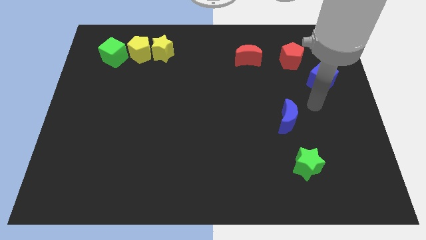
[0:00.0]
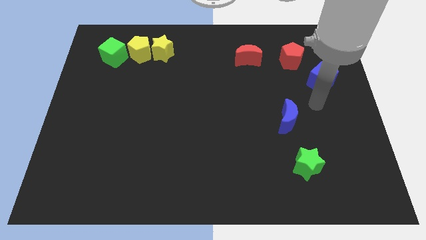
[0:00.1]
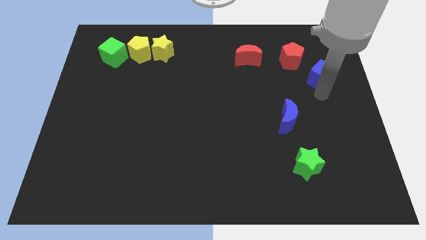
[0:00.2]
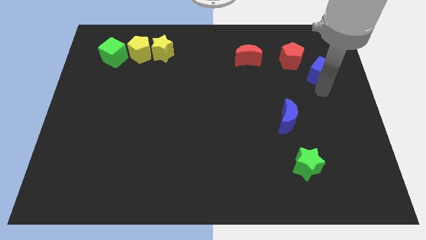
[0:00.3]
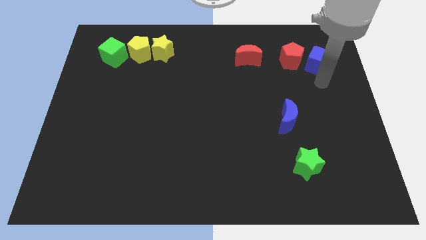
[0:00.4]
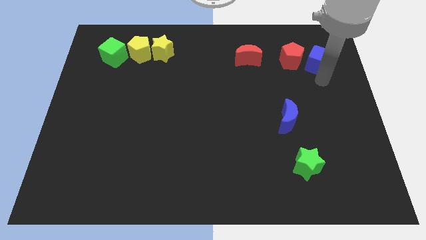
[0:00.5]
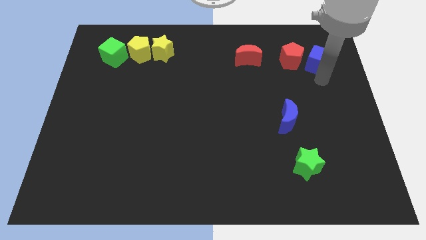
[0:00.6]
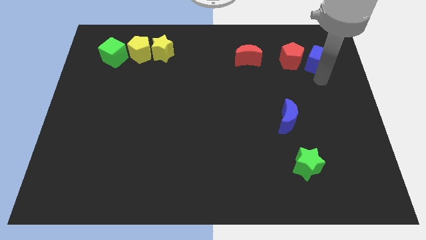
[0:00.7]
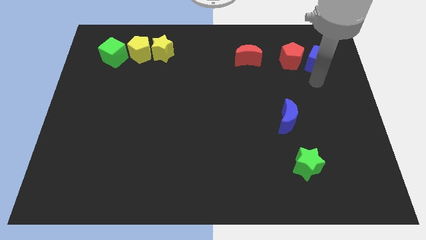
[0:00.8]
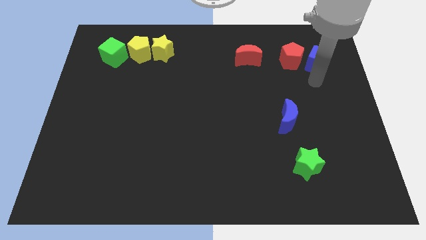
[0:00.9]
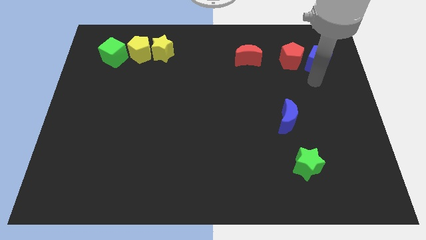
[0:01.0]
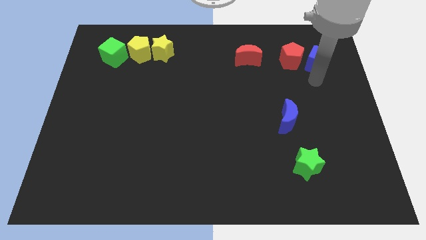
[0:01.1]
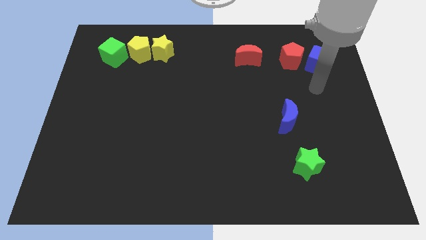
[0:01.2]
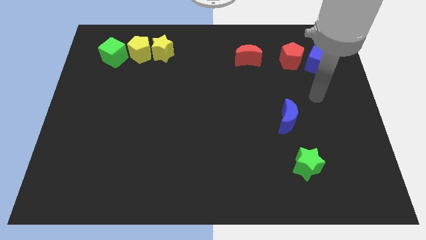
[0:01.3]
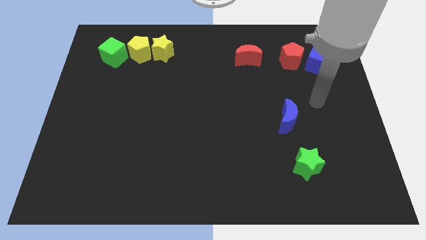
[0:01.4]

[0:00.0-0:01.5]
place the blue cube right to the red pentagon

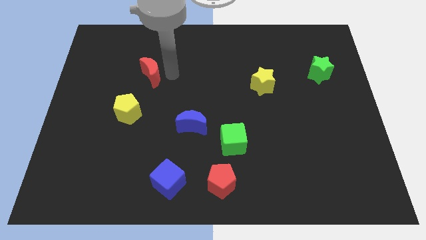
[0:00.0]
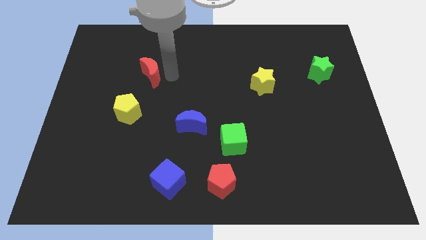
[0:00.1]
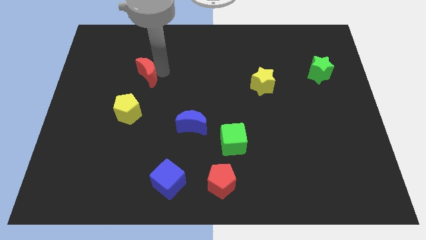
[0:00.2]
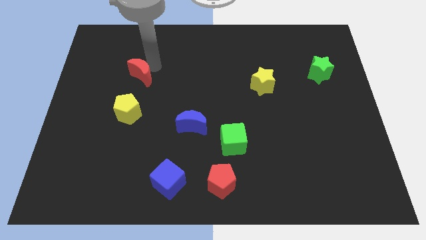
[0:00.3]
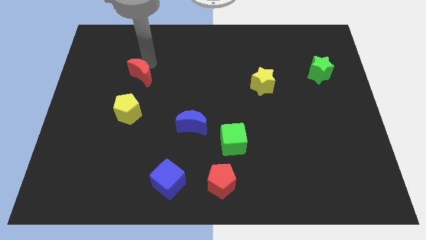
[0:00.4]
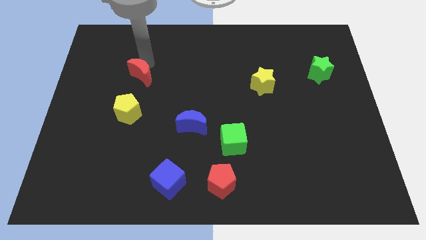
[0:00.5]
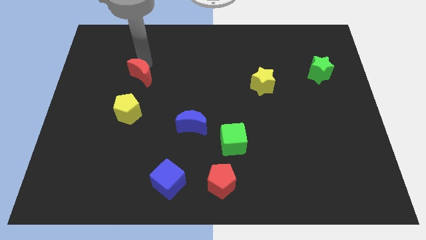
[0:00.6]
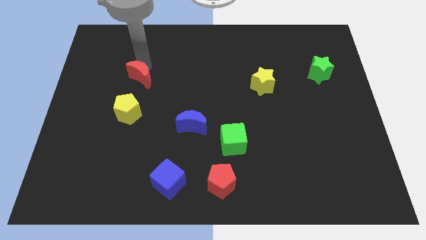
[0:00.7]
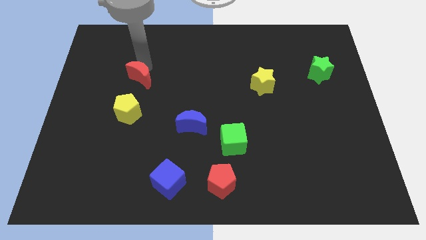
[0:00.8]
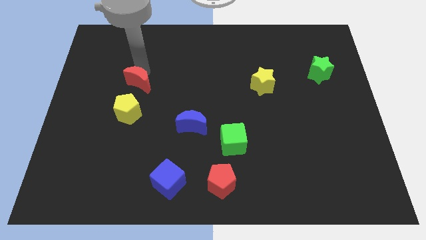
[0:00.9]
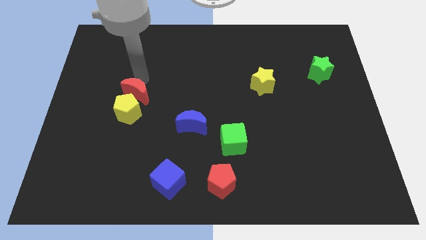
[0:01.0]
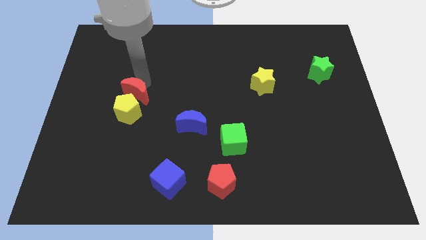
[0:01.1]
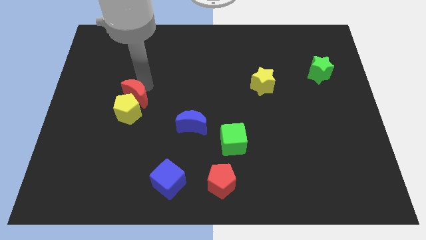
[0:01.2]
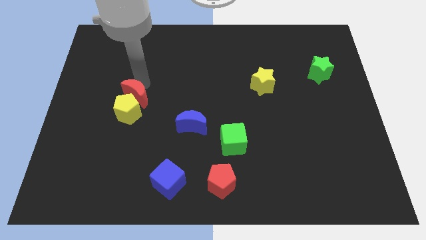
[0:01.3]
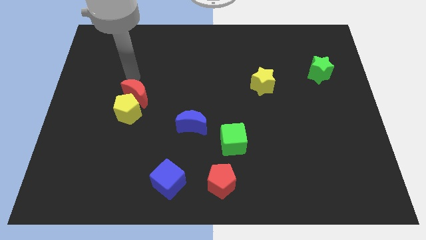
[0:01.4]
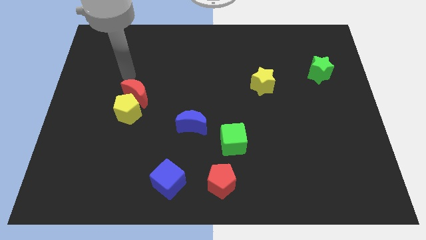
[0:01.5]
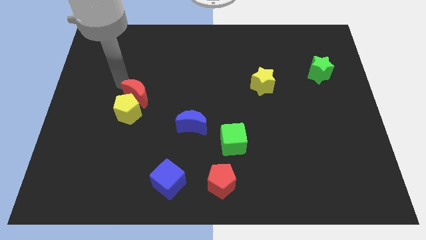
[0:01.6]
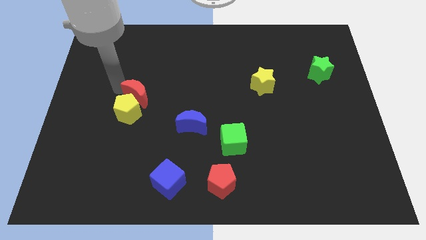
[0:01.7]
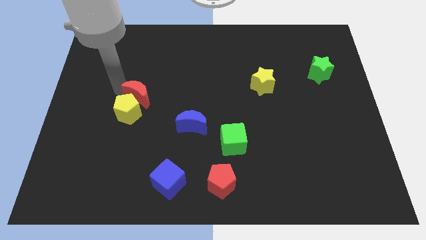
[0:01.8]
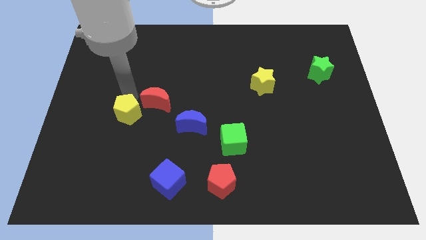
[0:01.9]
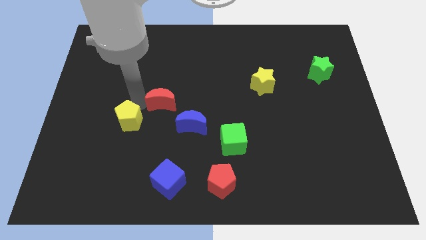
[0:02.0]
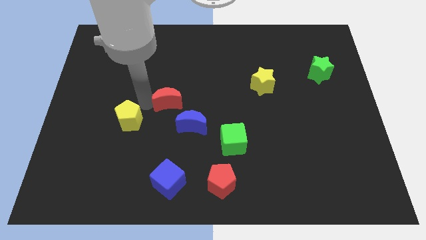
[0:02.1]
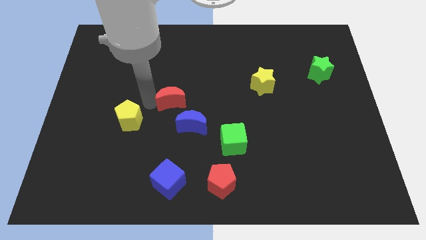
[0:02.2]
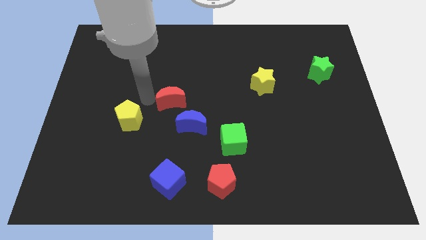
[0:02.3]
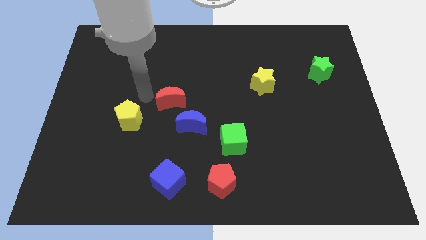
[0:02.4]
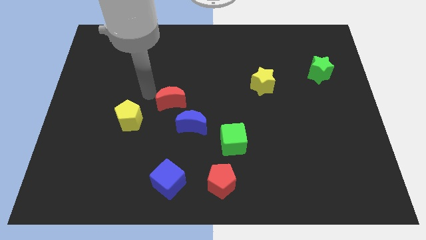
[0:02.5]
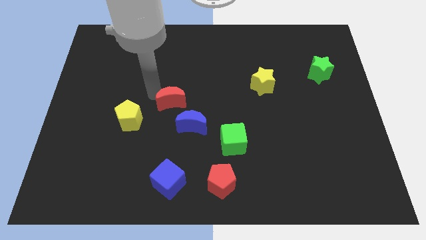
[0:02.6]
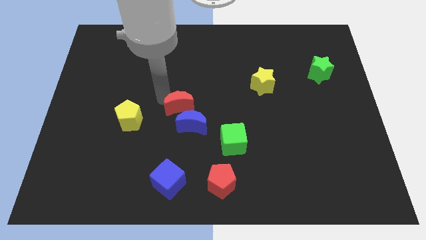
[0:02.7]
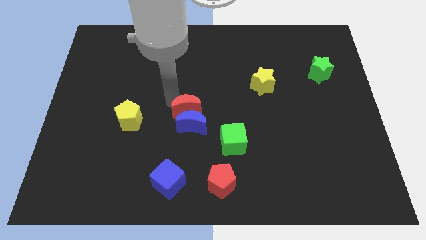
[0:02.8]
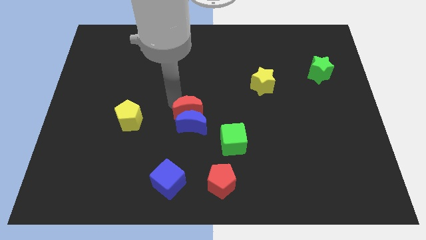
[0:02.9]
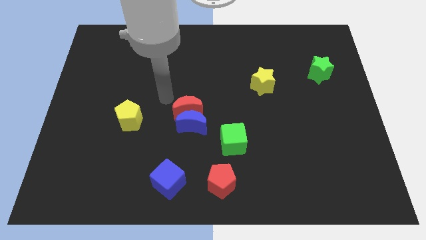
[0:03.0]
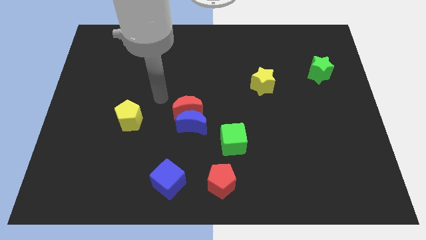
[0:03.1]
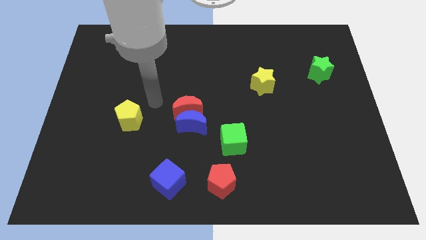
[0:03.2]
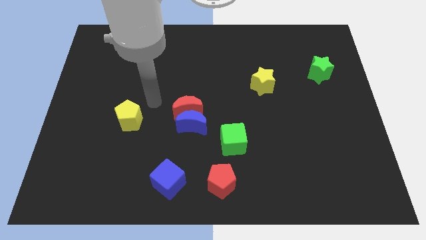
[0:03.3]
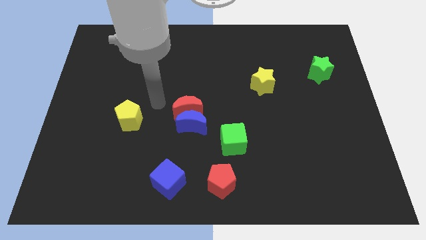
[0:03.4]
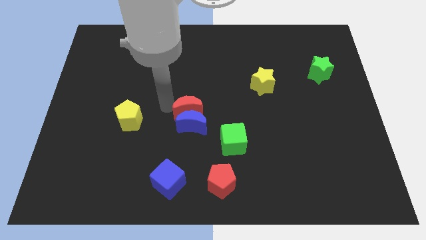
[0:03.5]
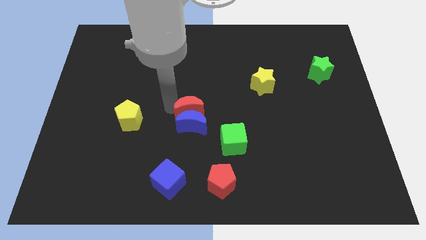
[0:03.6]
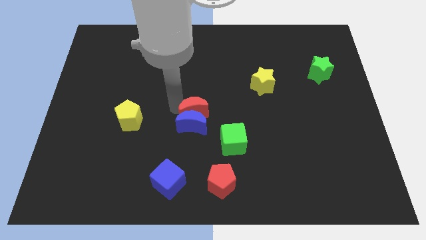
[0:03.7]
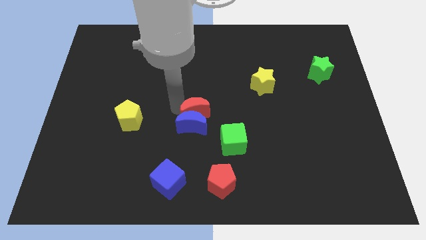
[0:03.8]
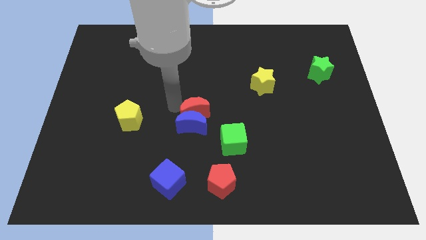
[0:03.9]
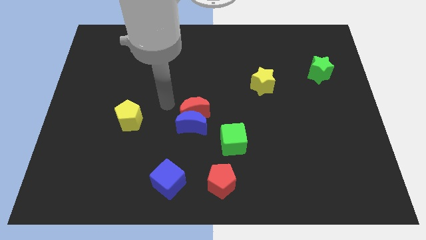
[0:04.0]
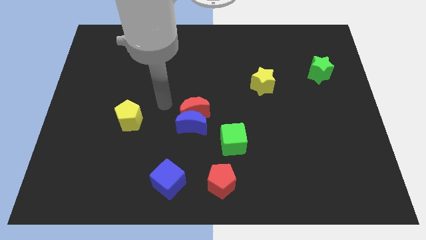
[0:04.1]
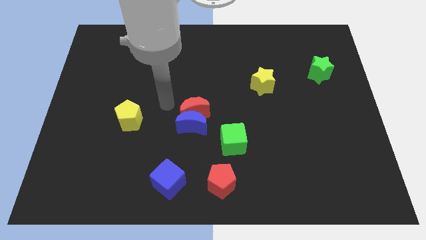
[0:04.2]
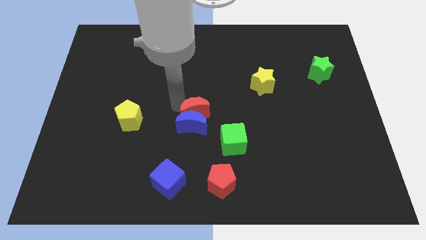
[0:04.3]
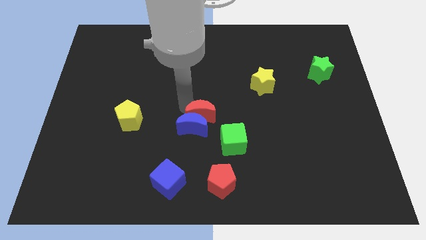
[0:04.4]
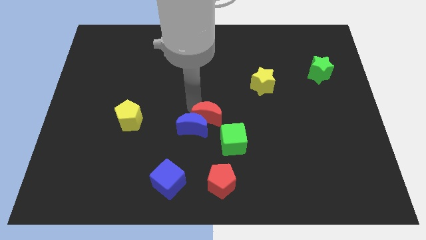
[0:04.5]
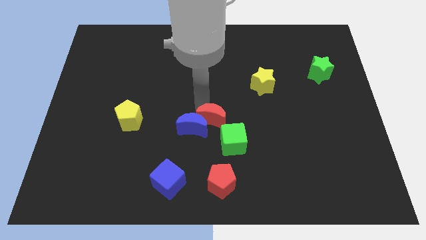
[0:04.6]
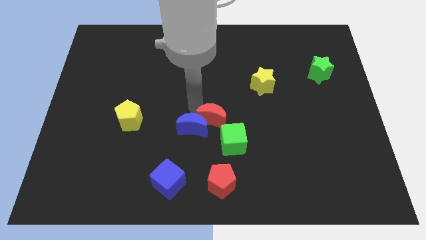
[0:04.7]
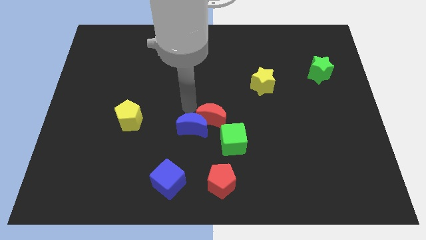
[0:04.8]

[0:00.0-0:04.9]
slide the red moon into the blue moon

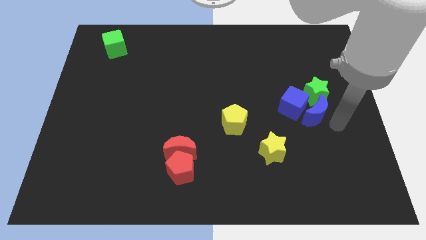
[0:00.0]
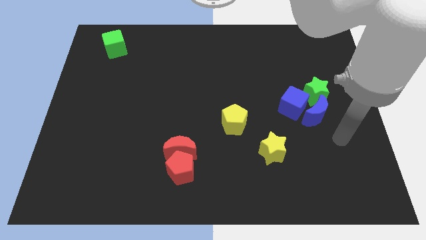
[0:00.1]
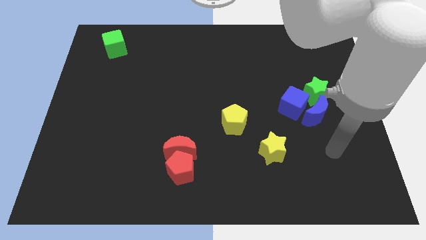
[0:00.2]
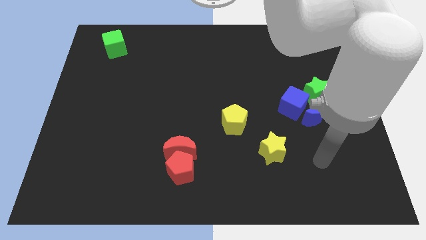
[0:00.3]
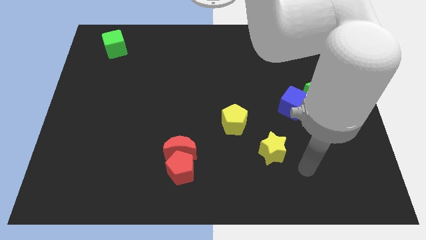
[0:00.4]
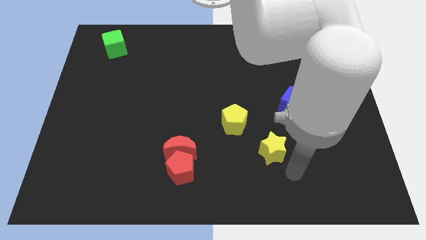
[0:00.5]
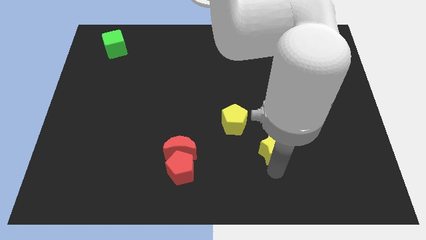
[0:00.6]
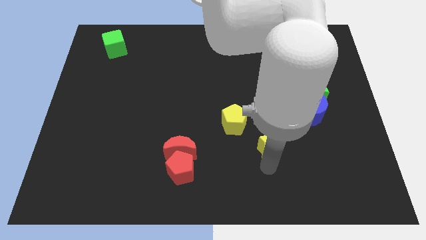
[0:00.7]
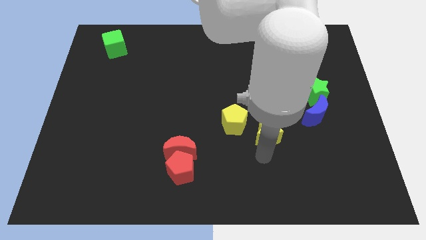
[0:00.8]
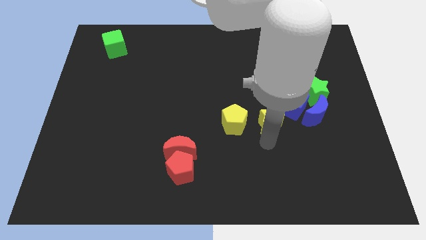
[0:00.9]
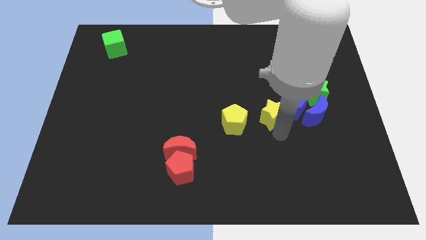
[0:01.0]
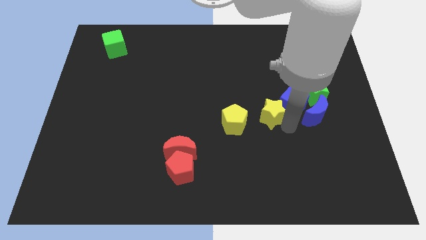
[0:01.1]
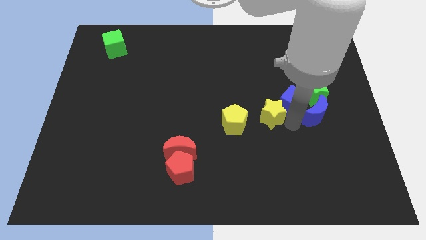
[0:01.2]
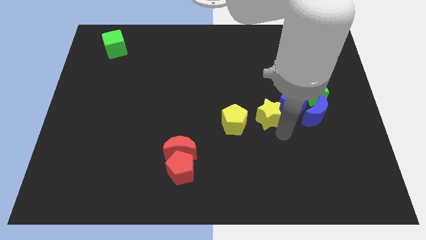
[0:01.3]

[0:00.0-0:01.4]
push the yellow star to the right of the yellow pentagon

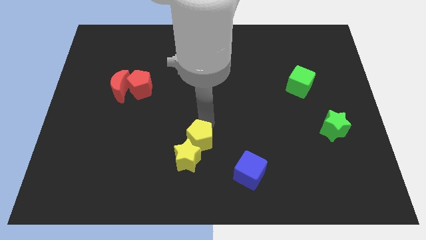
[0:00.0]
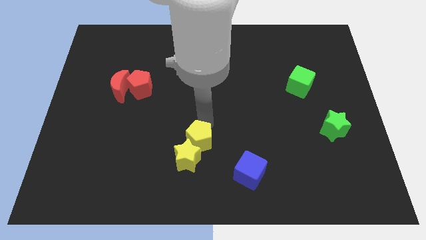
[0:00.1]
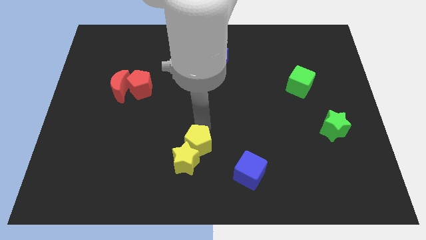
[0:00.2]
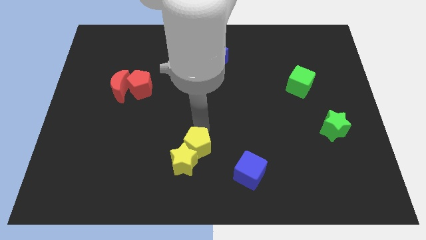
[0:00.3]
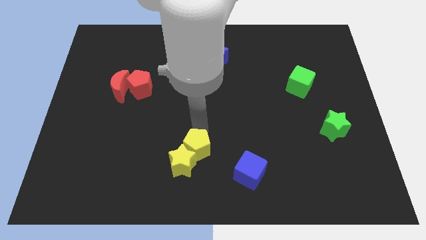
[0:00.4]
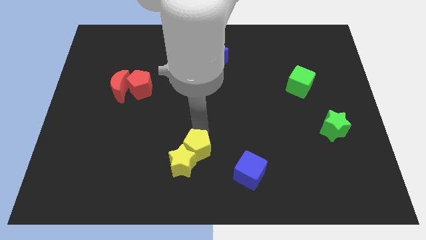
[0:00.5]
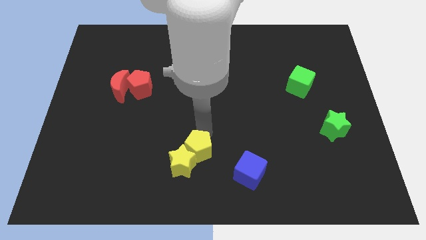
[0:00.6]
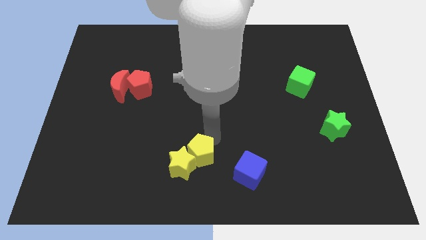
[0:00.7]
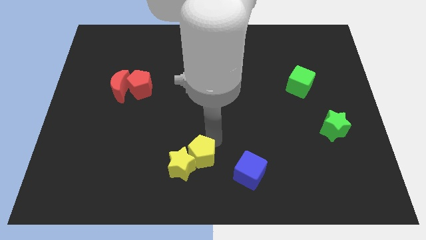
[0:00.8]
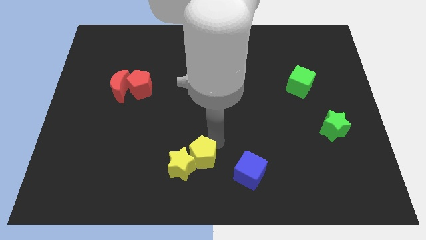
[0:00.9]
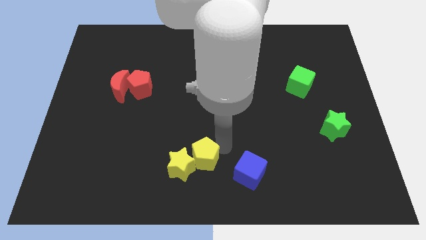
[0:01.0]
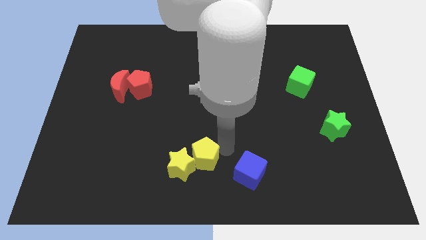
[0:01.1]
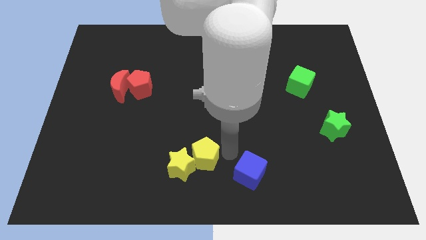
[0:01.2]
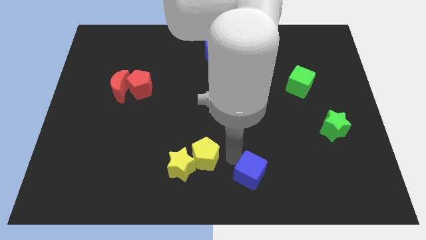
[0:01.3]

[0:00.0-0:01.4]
push the yellow pentagon along with the yellow star to the bottom centre of the board
